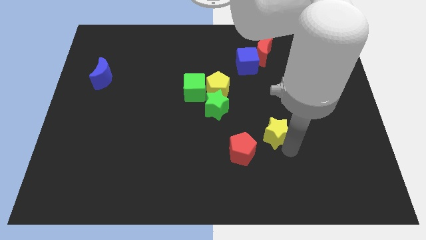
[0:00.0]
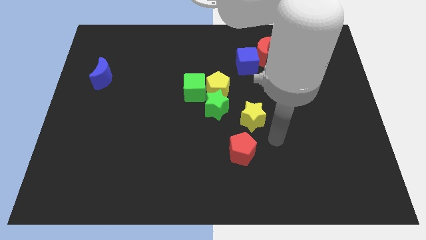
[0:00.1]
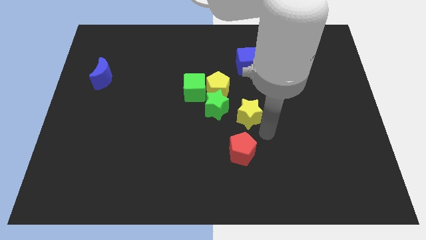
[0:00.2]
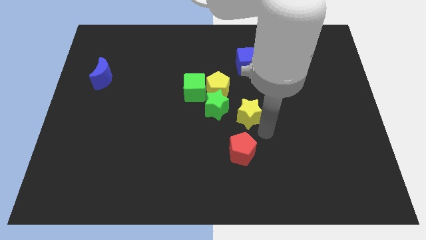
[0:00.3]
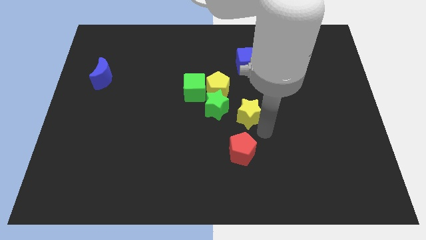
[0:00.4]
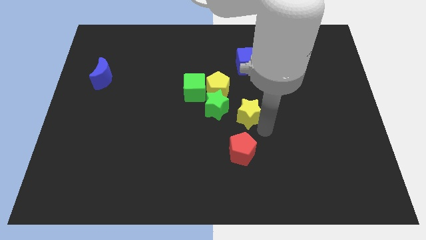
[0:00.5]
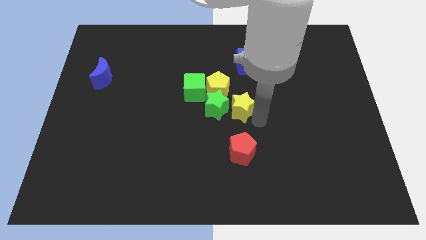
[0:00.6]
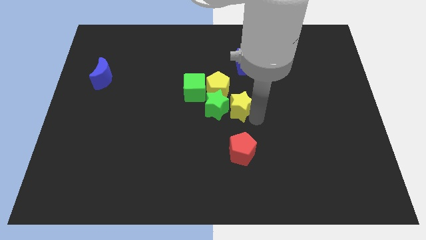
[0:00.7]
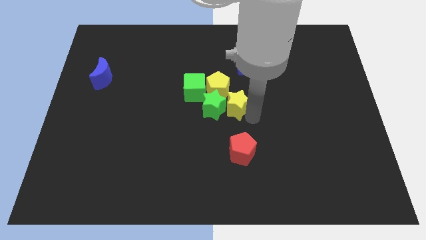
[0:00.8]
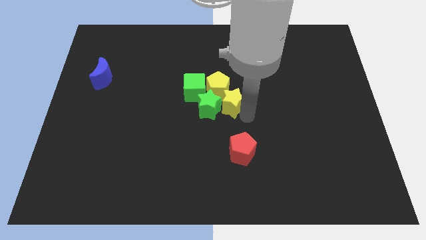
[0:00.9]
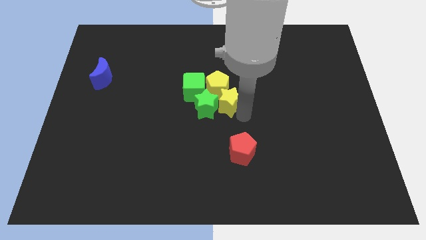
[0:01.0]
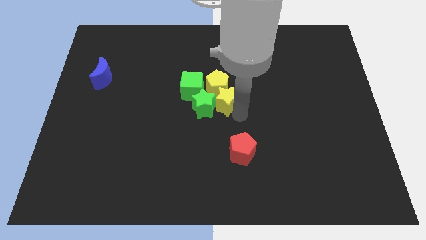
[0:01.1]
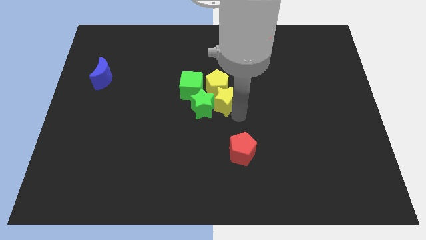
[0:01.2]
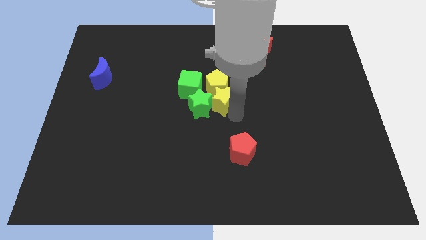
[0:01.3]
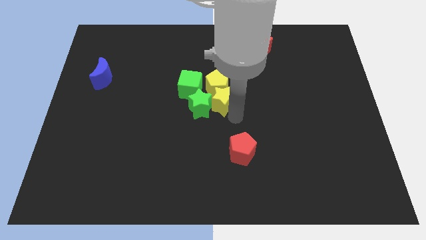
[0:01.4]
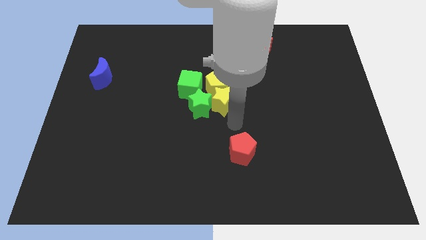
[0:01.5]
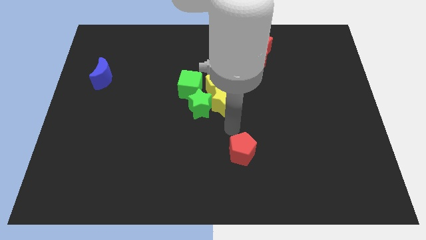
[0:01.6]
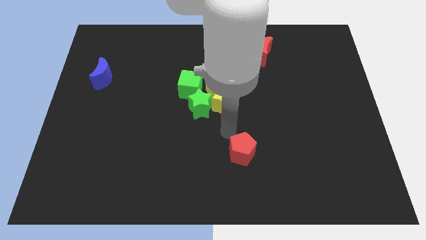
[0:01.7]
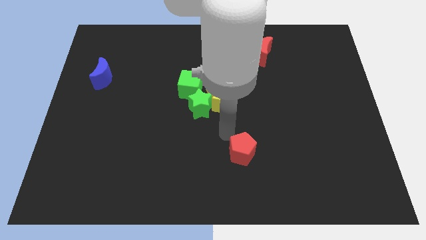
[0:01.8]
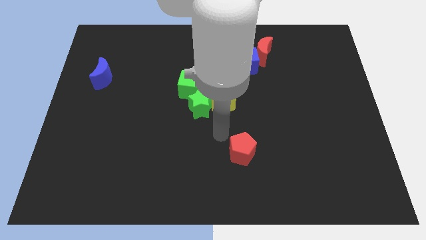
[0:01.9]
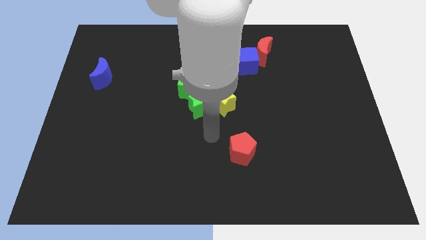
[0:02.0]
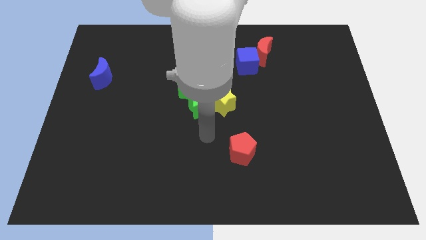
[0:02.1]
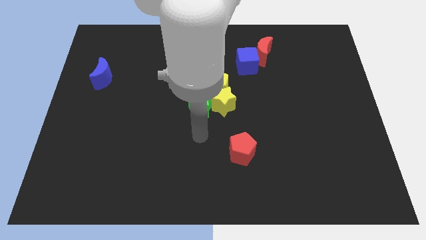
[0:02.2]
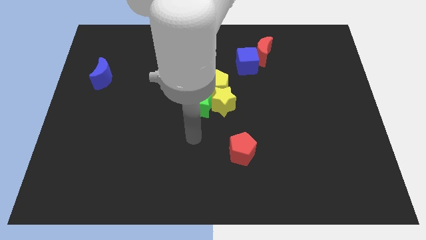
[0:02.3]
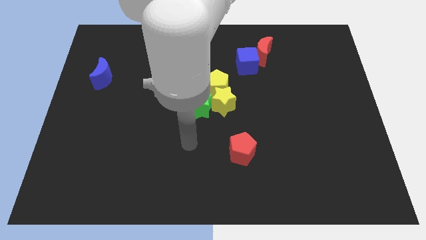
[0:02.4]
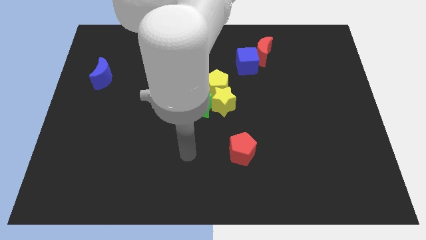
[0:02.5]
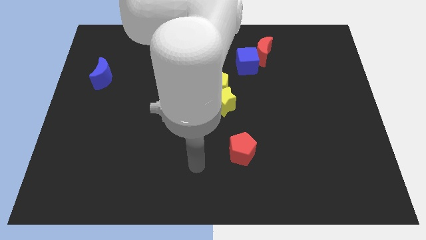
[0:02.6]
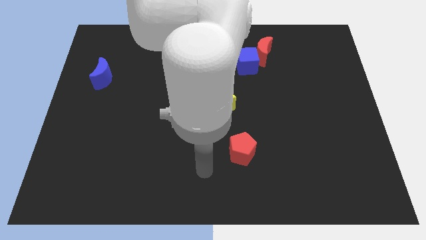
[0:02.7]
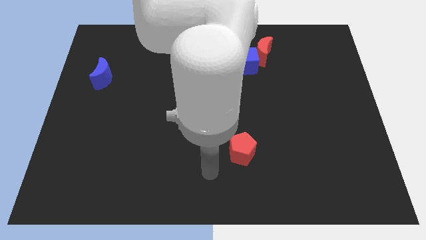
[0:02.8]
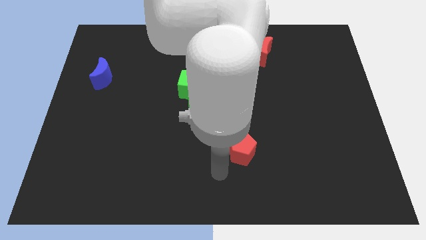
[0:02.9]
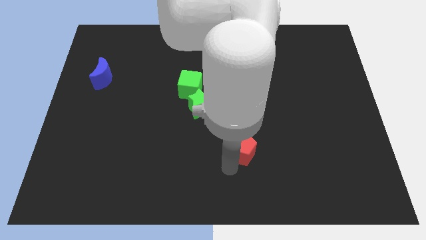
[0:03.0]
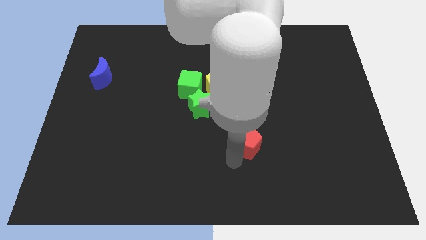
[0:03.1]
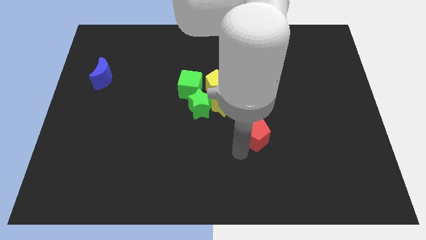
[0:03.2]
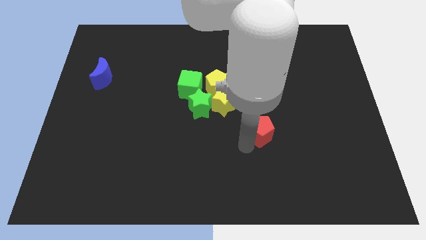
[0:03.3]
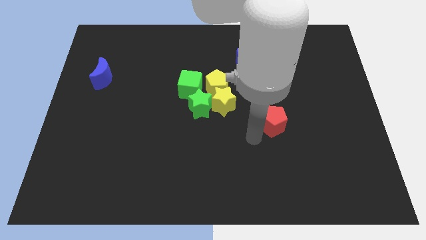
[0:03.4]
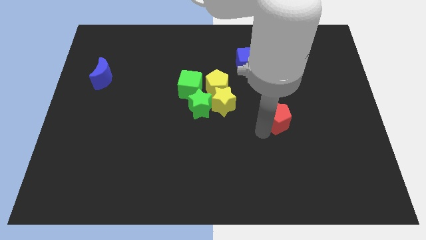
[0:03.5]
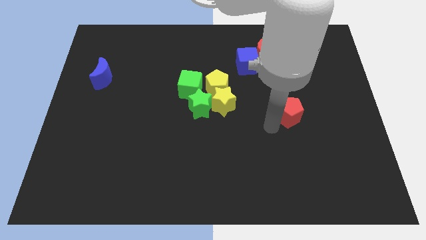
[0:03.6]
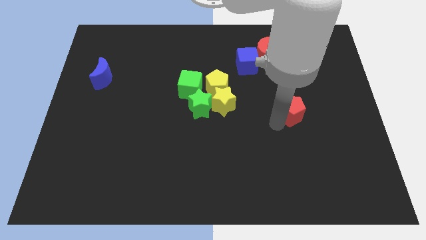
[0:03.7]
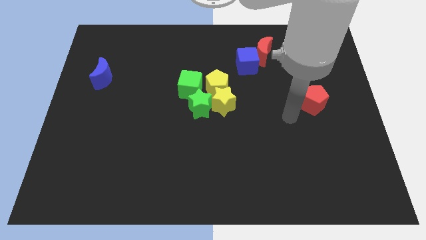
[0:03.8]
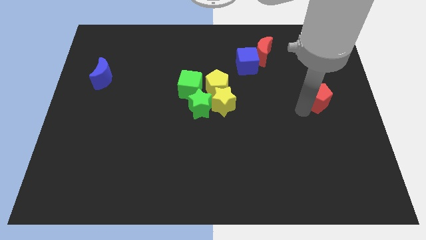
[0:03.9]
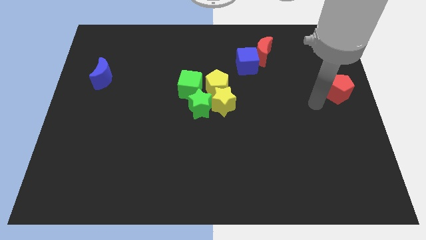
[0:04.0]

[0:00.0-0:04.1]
move the yellow star into the yellow pentagon

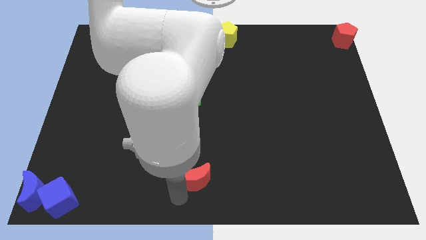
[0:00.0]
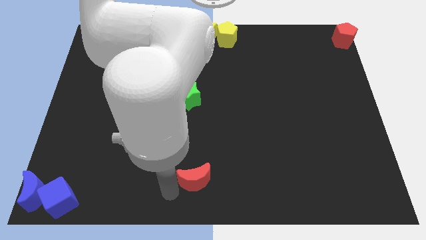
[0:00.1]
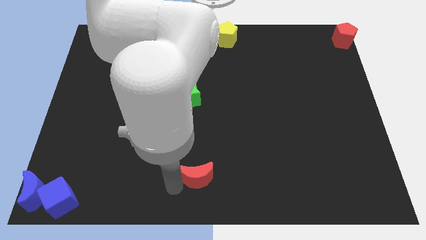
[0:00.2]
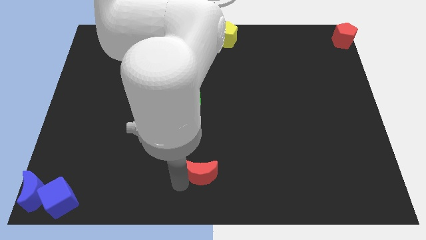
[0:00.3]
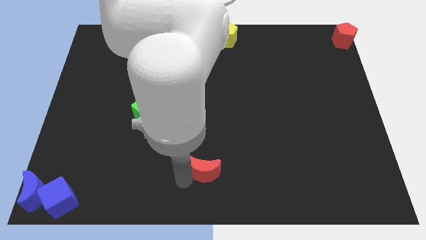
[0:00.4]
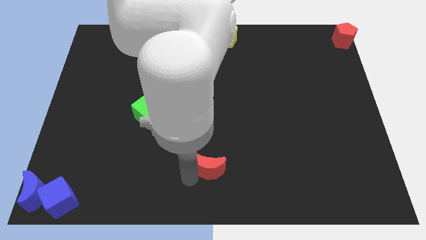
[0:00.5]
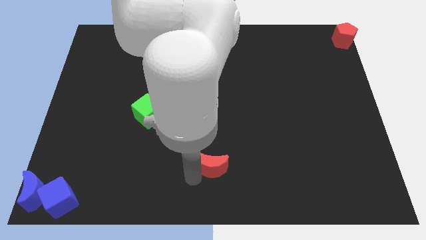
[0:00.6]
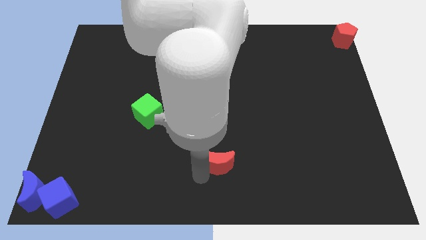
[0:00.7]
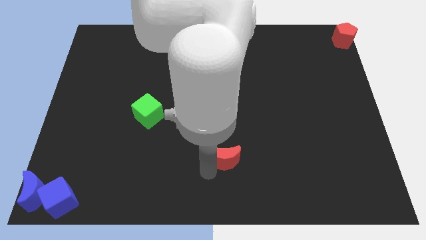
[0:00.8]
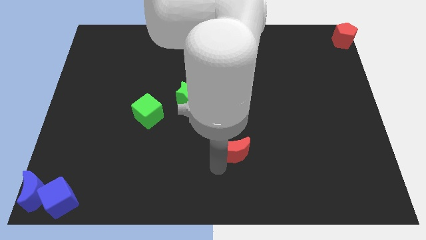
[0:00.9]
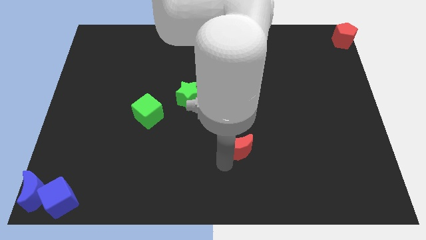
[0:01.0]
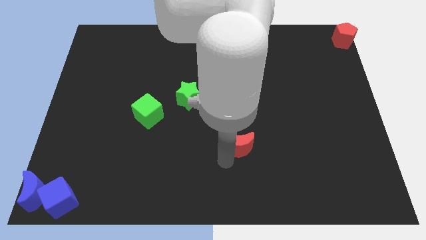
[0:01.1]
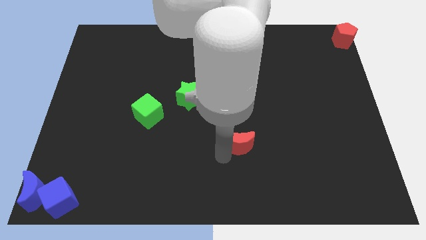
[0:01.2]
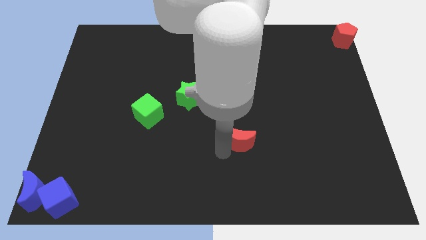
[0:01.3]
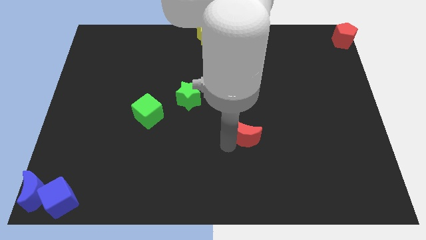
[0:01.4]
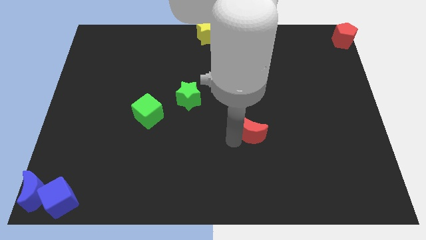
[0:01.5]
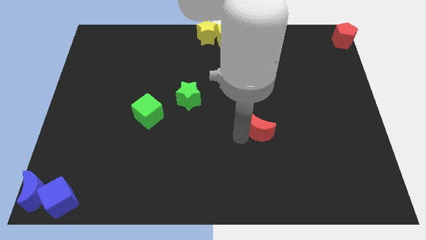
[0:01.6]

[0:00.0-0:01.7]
push the red moon towards the top side of the board

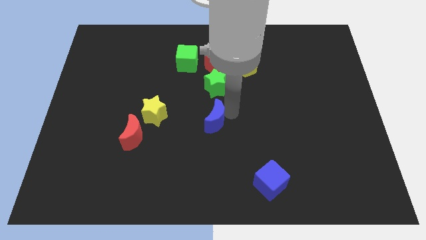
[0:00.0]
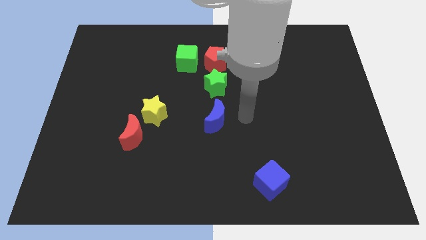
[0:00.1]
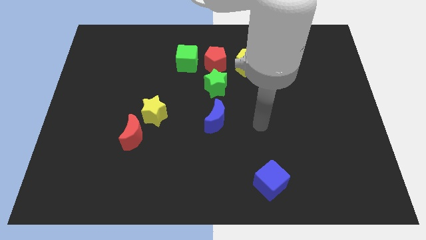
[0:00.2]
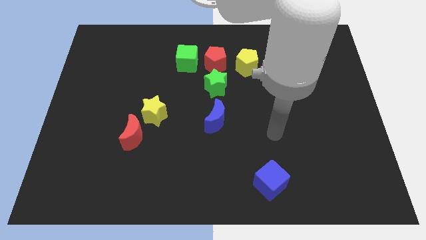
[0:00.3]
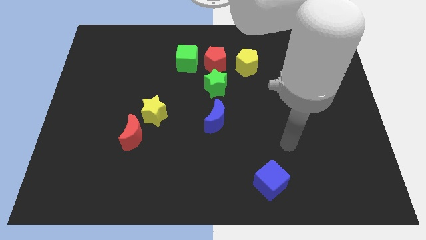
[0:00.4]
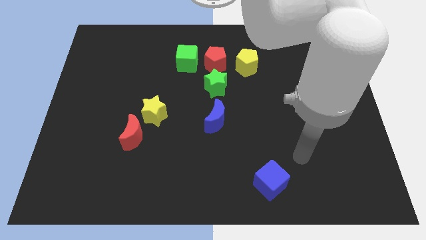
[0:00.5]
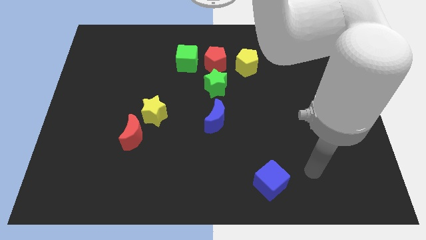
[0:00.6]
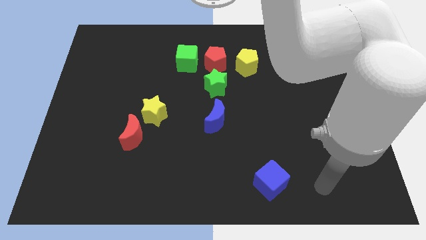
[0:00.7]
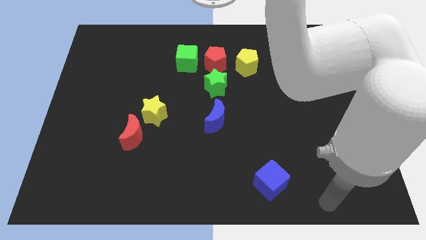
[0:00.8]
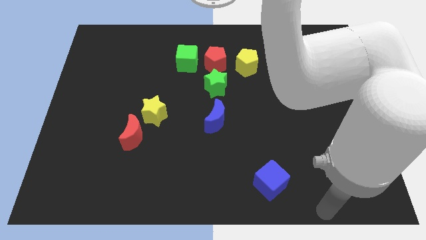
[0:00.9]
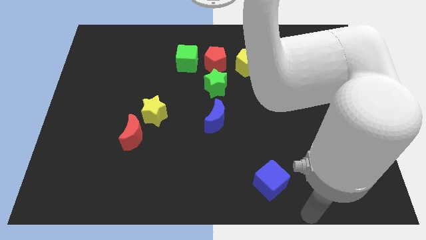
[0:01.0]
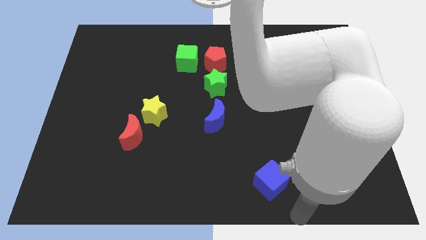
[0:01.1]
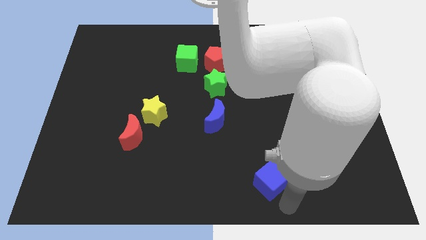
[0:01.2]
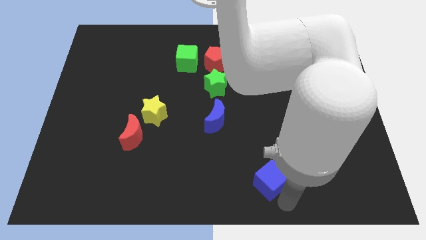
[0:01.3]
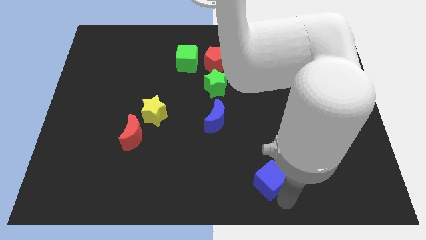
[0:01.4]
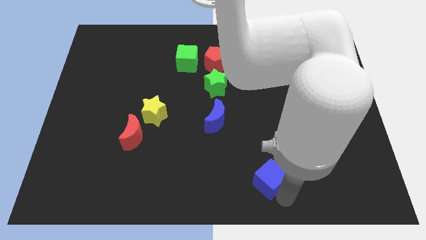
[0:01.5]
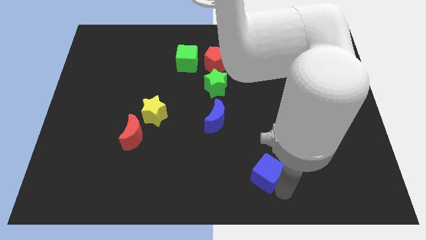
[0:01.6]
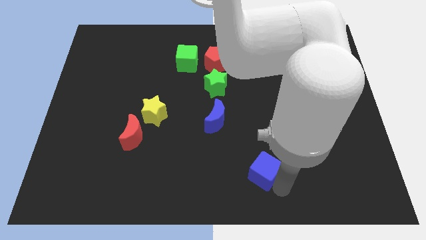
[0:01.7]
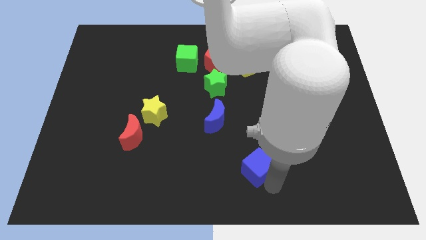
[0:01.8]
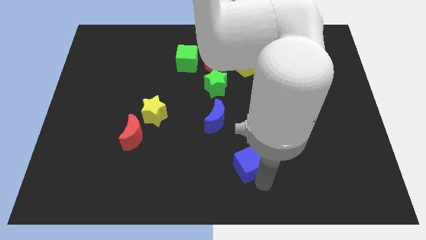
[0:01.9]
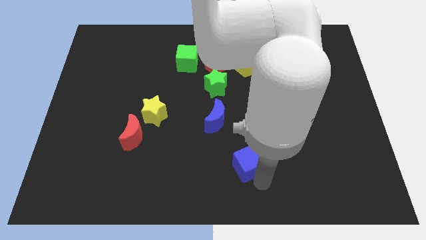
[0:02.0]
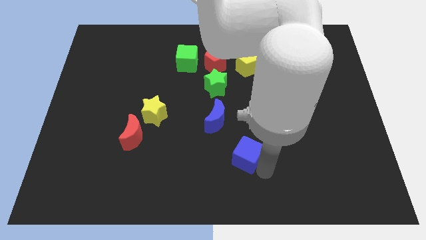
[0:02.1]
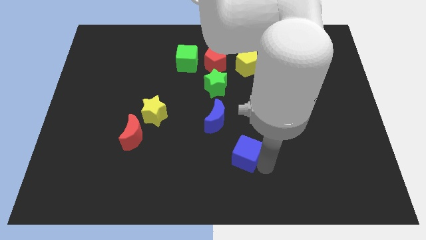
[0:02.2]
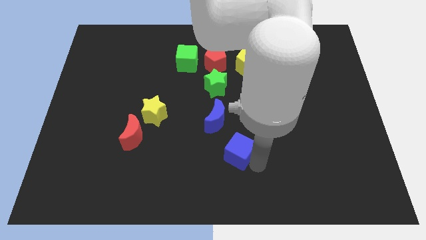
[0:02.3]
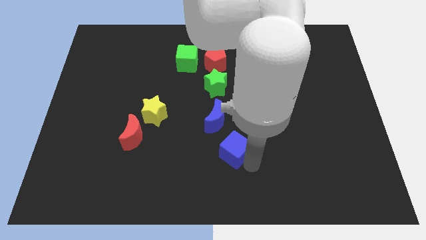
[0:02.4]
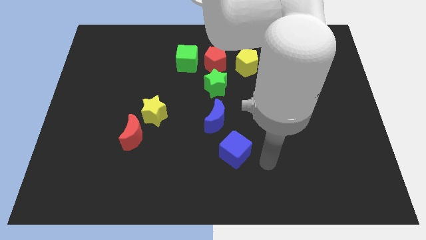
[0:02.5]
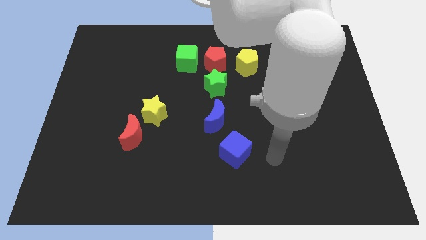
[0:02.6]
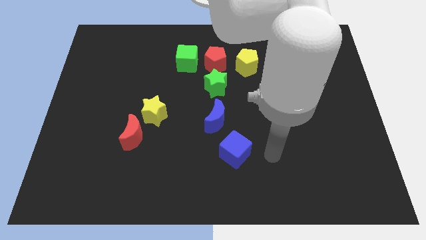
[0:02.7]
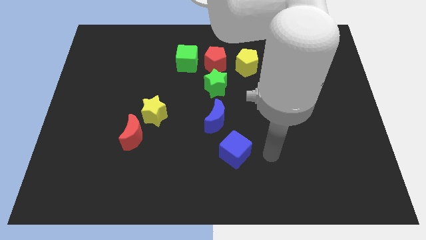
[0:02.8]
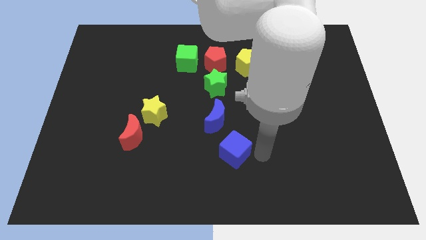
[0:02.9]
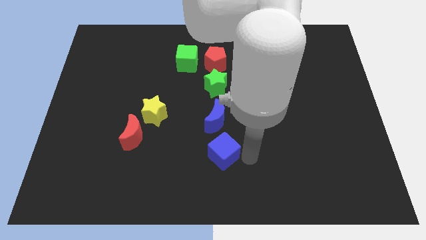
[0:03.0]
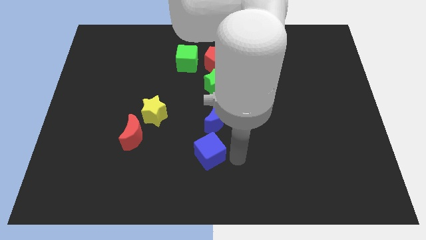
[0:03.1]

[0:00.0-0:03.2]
move the blue cube to the bottom of the blue crescent

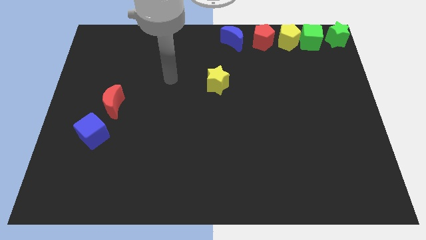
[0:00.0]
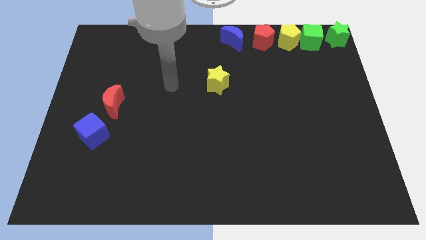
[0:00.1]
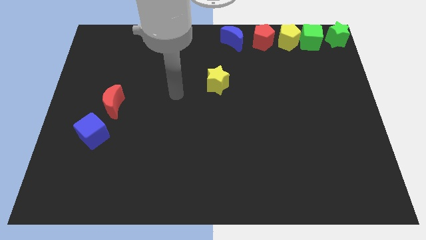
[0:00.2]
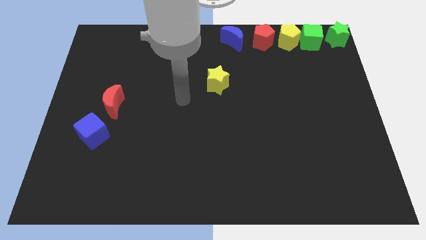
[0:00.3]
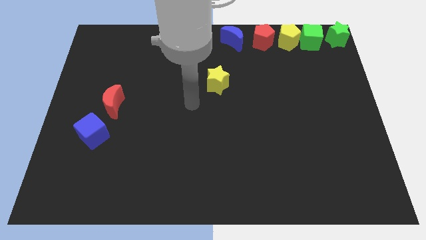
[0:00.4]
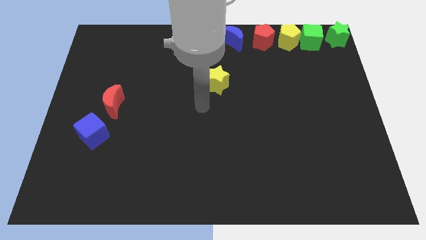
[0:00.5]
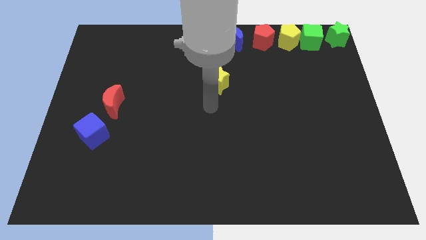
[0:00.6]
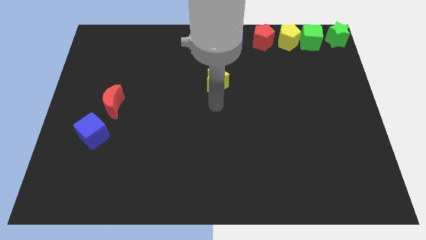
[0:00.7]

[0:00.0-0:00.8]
move the arm towards the bottom of the yellow star
